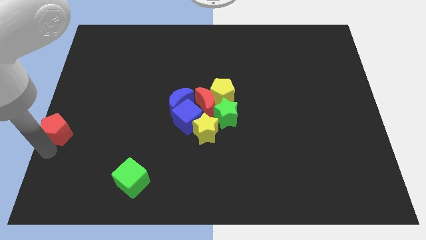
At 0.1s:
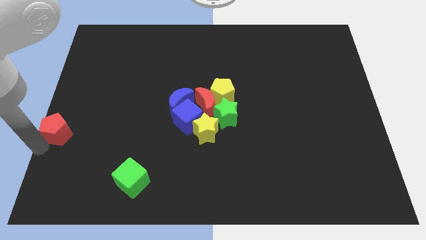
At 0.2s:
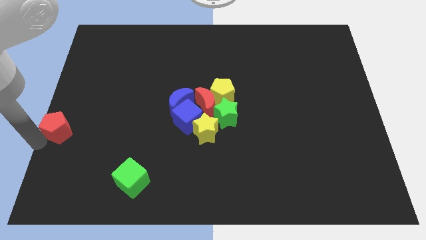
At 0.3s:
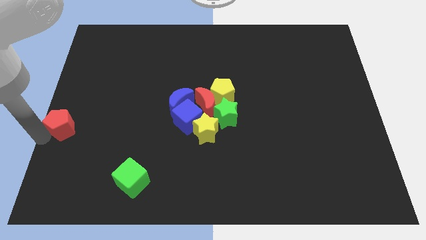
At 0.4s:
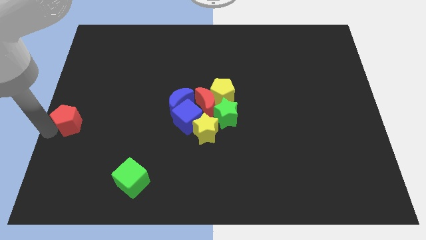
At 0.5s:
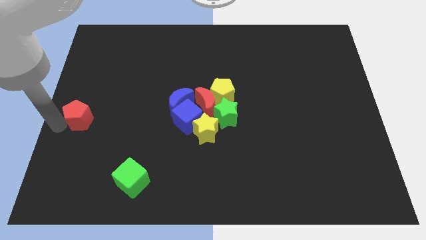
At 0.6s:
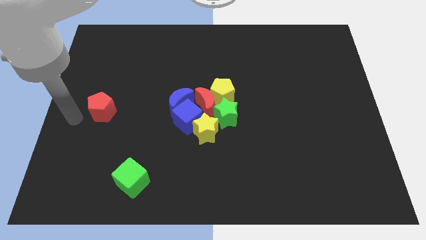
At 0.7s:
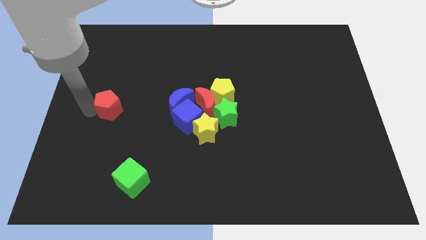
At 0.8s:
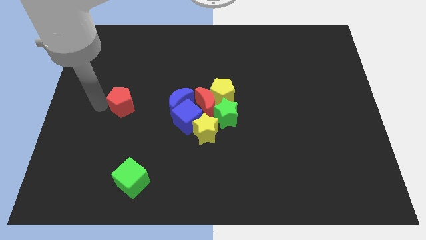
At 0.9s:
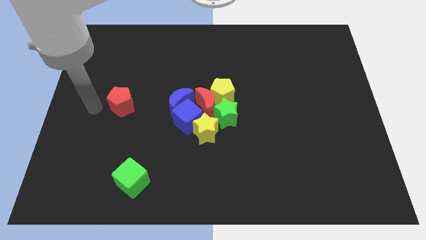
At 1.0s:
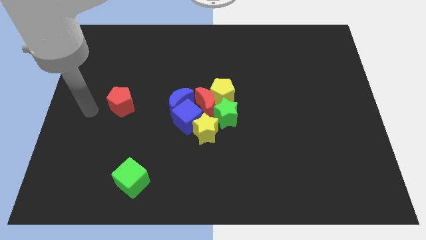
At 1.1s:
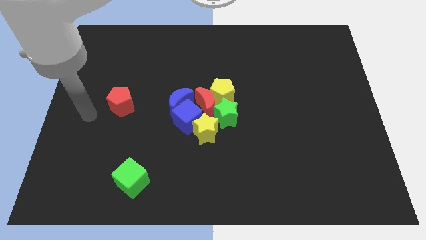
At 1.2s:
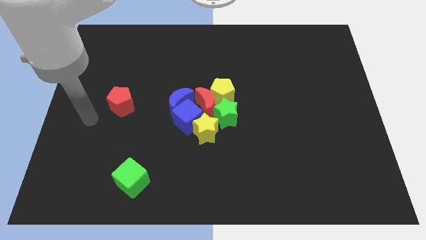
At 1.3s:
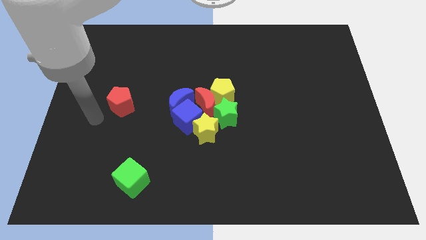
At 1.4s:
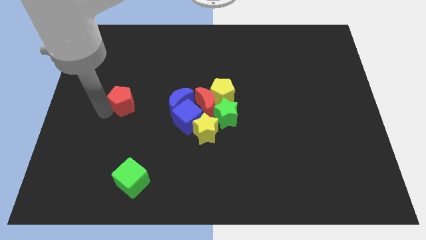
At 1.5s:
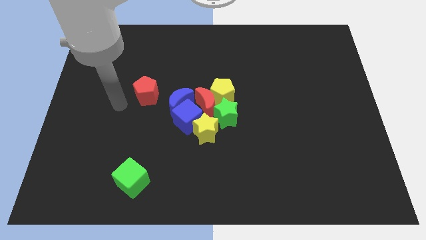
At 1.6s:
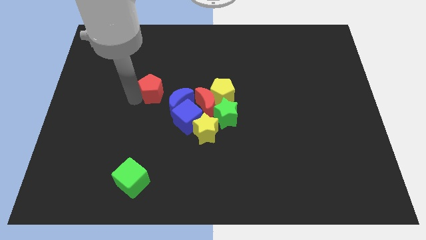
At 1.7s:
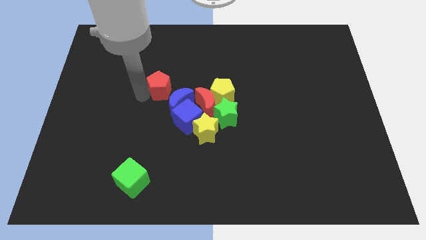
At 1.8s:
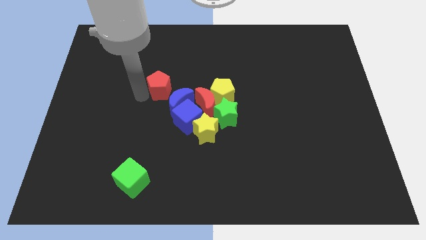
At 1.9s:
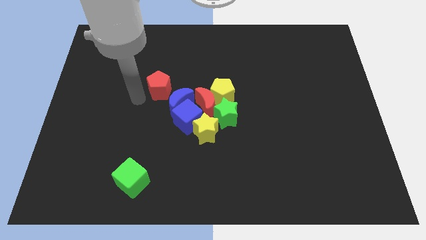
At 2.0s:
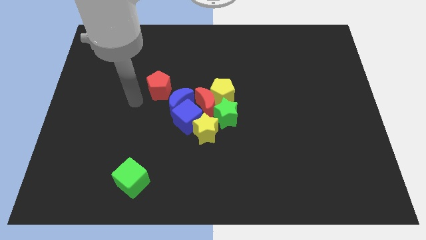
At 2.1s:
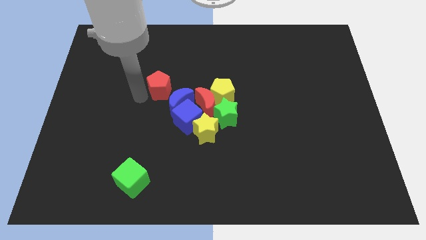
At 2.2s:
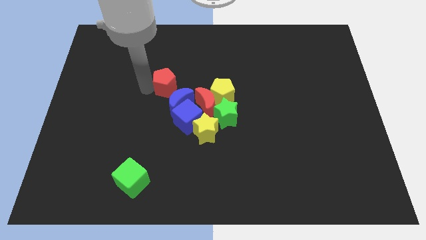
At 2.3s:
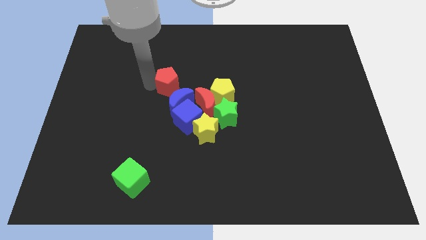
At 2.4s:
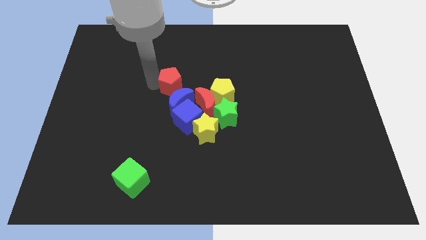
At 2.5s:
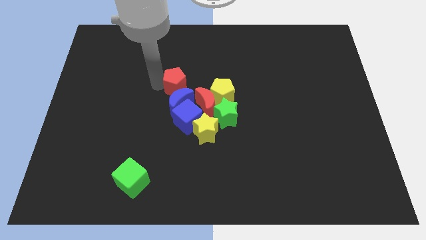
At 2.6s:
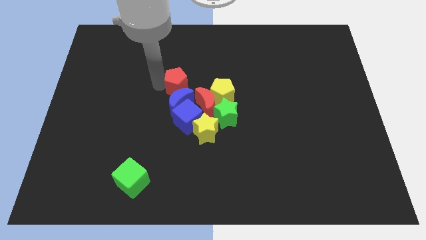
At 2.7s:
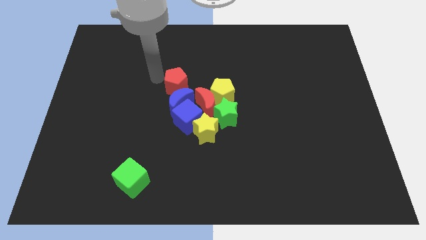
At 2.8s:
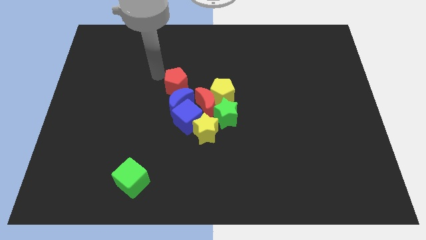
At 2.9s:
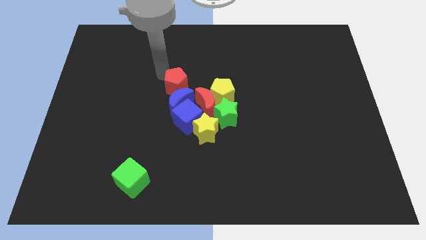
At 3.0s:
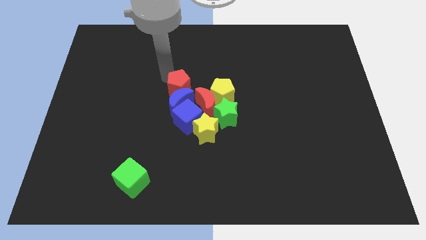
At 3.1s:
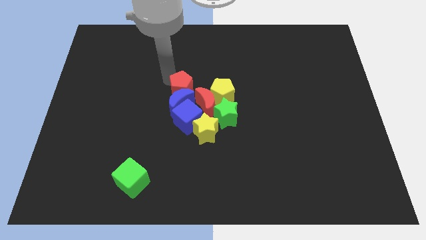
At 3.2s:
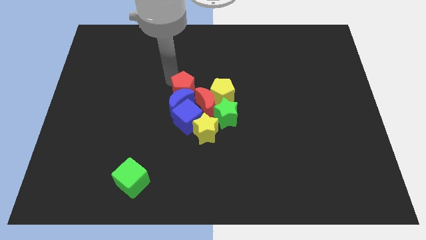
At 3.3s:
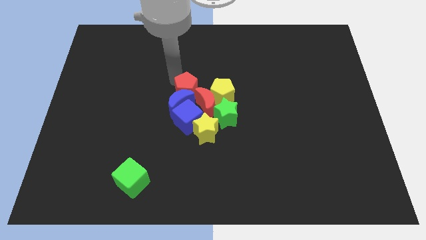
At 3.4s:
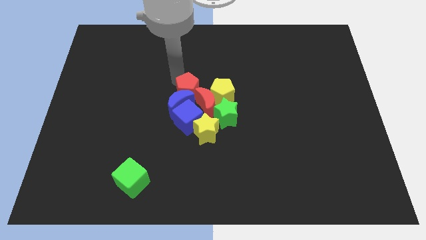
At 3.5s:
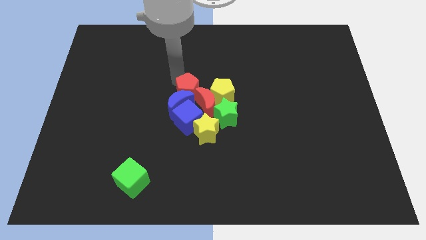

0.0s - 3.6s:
push the red pentagon into the blue moon

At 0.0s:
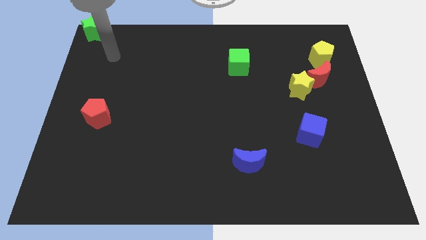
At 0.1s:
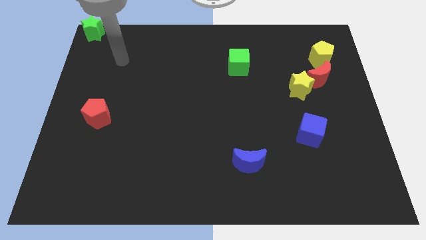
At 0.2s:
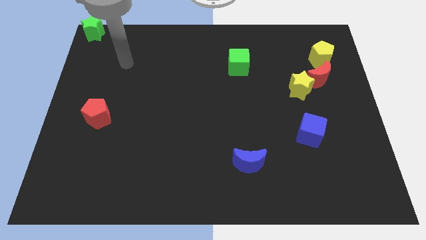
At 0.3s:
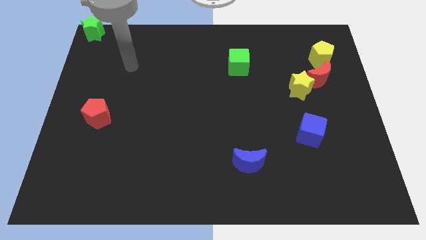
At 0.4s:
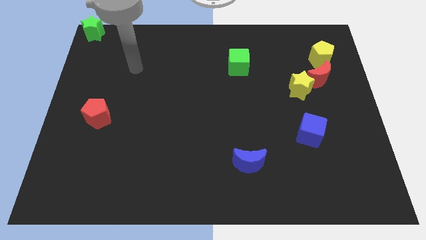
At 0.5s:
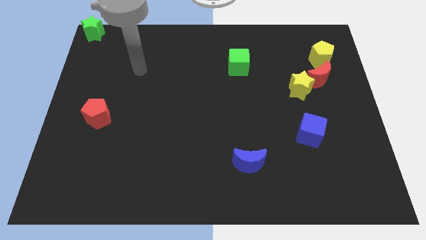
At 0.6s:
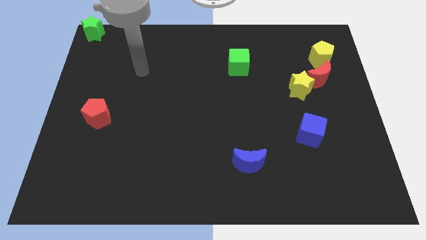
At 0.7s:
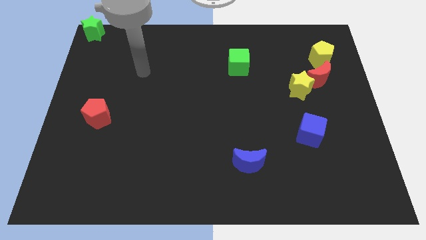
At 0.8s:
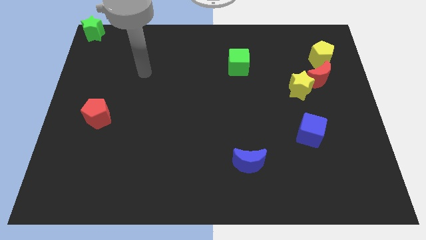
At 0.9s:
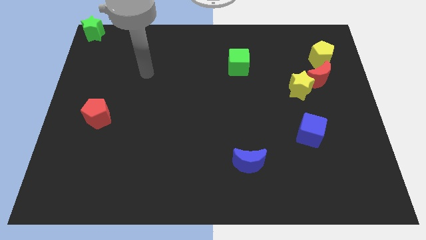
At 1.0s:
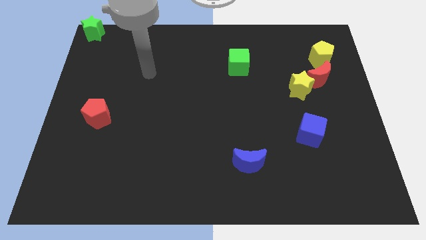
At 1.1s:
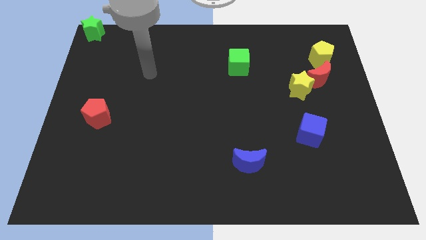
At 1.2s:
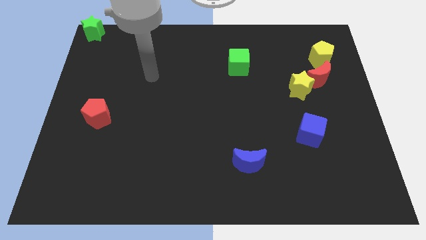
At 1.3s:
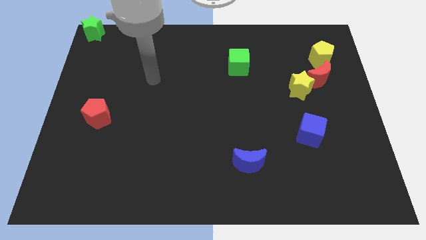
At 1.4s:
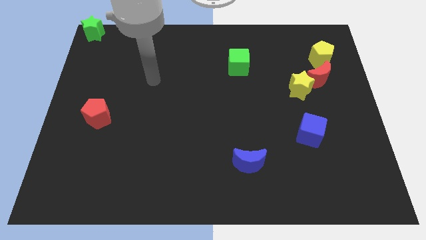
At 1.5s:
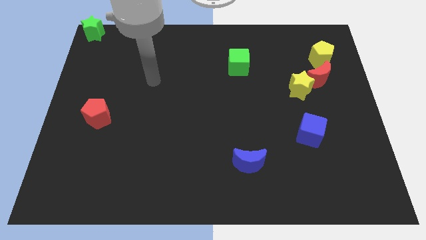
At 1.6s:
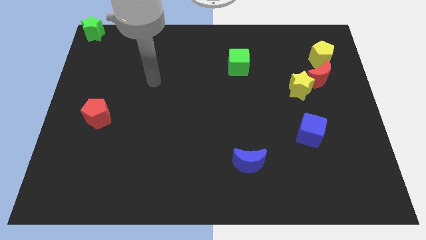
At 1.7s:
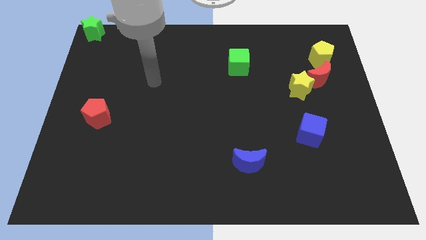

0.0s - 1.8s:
move the arm towards the center of the board

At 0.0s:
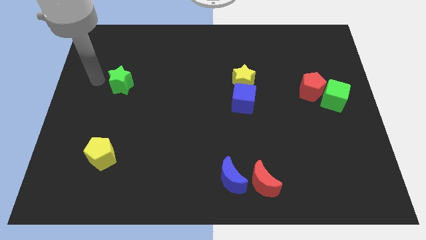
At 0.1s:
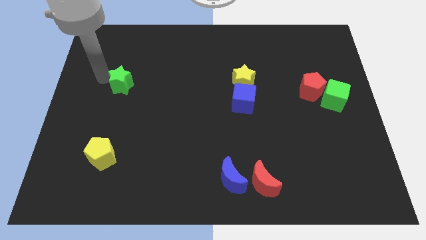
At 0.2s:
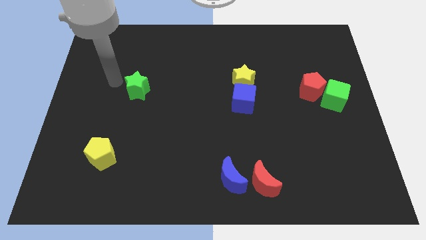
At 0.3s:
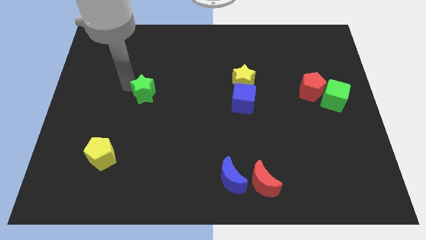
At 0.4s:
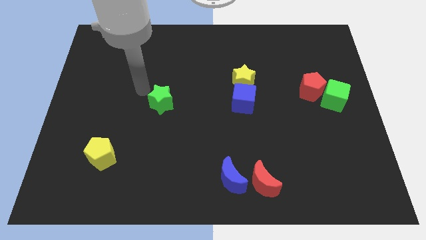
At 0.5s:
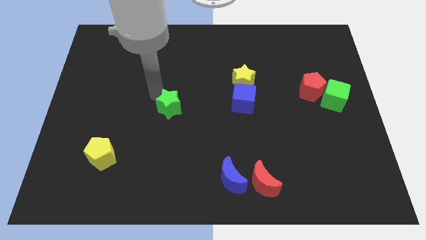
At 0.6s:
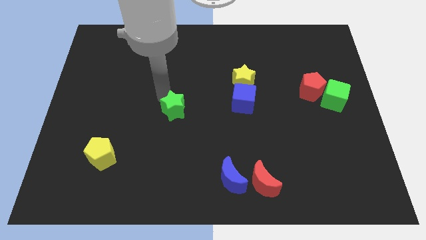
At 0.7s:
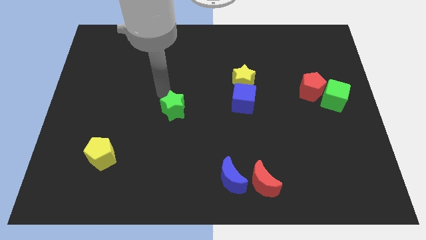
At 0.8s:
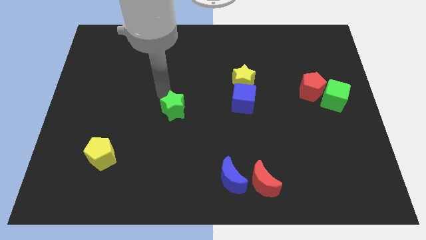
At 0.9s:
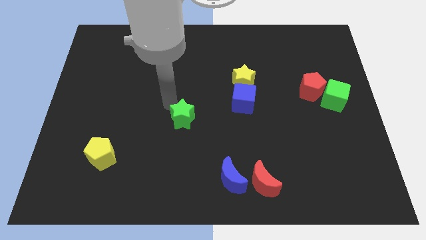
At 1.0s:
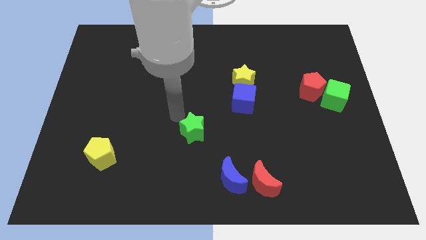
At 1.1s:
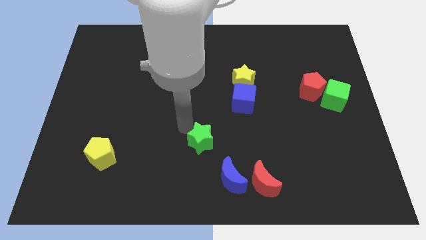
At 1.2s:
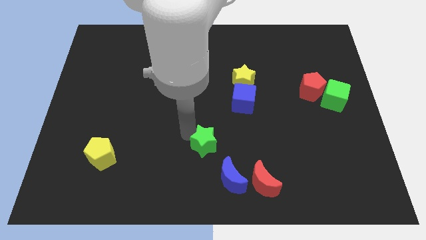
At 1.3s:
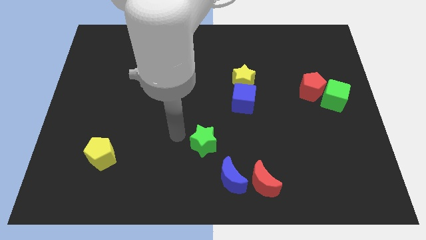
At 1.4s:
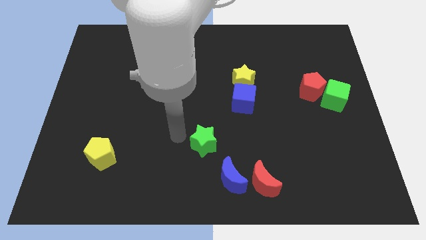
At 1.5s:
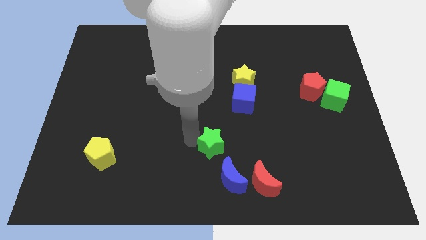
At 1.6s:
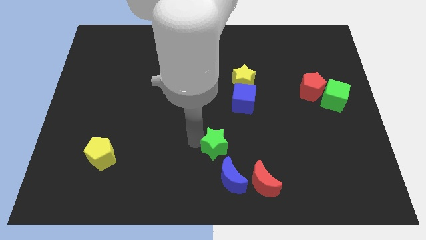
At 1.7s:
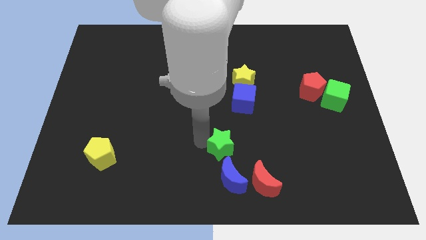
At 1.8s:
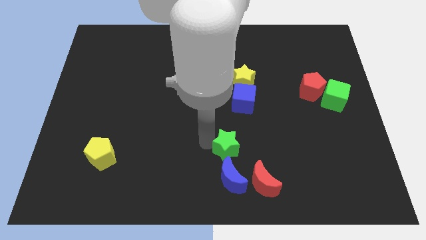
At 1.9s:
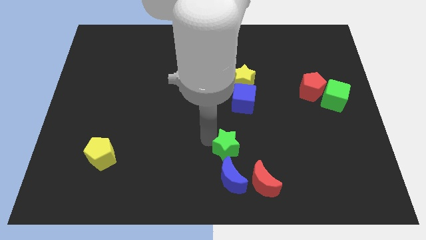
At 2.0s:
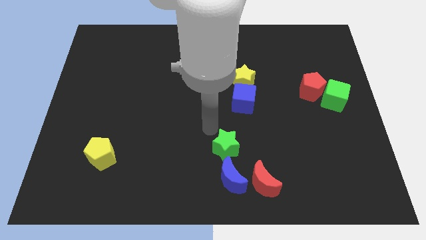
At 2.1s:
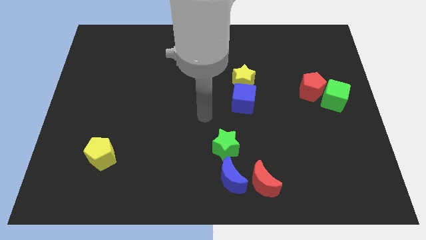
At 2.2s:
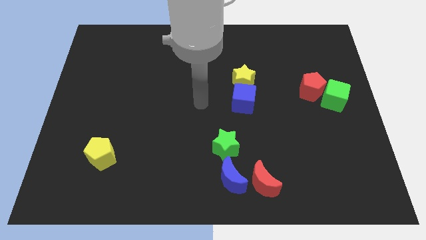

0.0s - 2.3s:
place the green star into blue moon diagonally

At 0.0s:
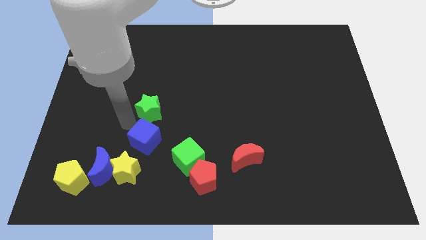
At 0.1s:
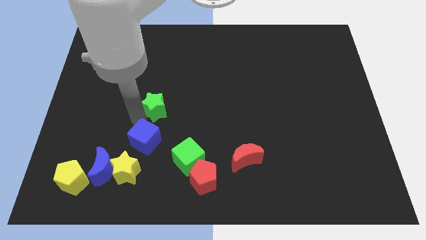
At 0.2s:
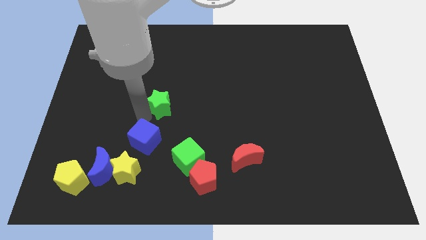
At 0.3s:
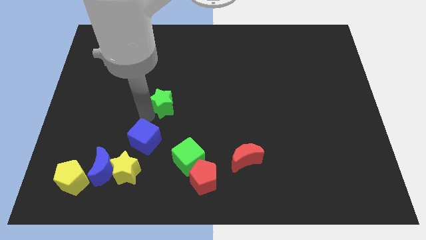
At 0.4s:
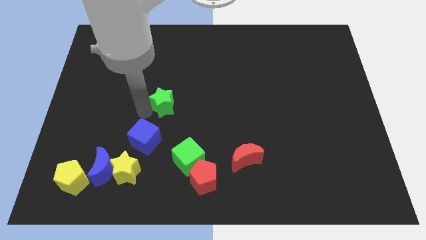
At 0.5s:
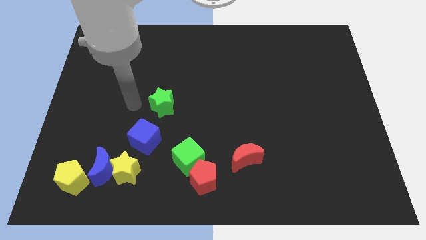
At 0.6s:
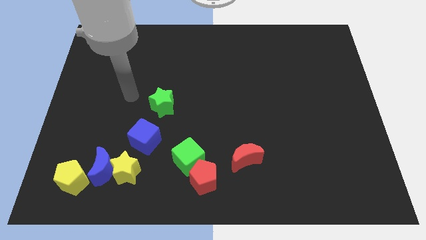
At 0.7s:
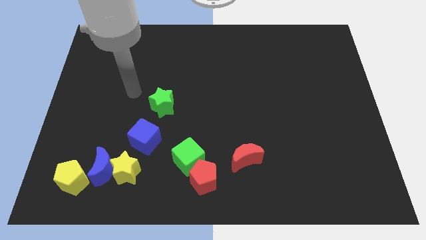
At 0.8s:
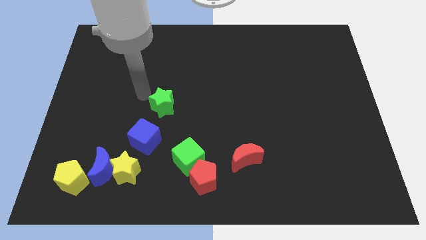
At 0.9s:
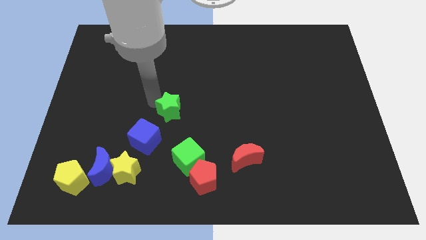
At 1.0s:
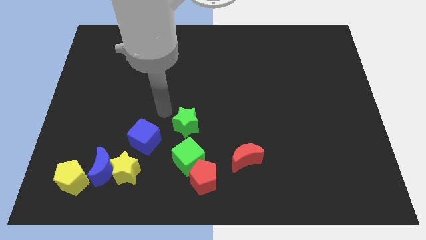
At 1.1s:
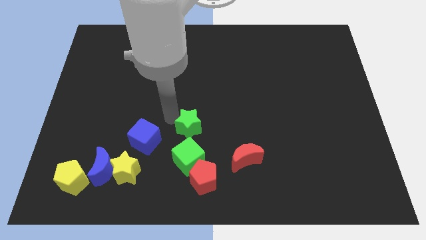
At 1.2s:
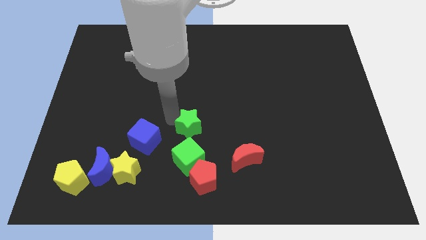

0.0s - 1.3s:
slide the green star towards the top side of the green cube
